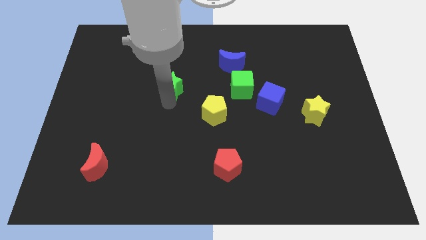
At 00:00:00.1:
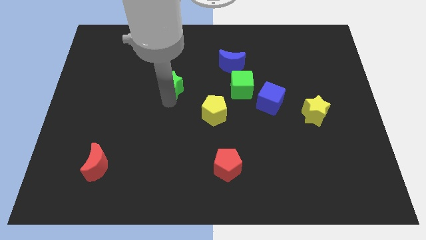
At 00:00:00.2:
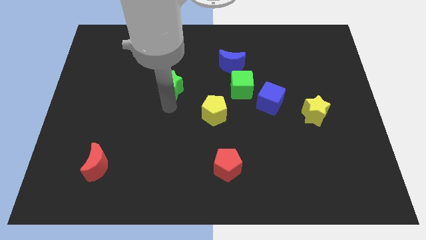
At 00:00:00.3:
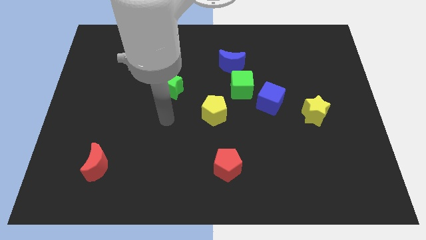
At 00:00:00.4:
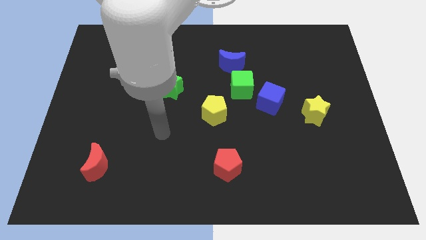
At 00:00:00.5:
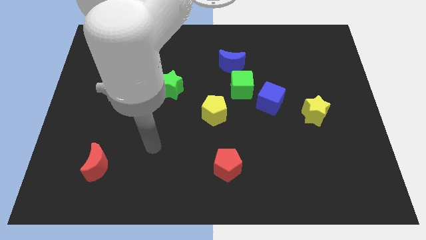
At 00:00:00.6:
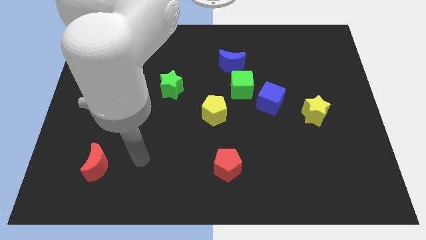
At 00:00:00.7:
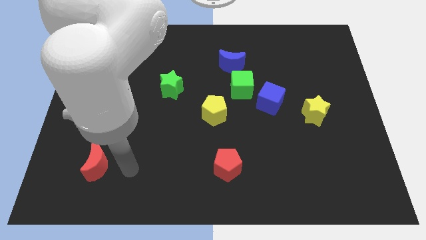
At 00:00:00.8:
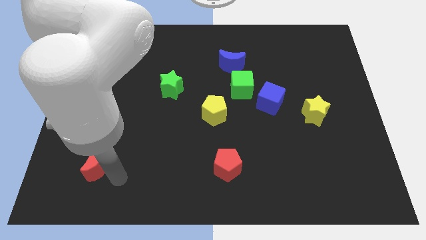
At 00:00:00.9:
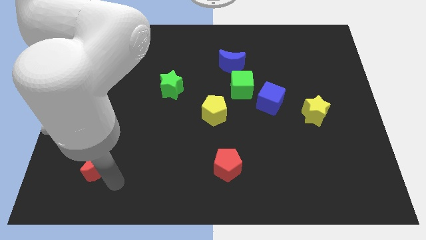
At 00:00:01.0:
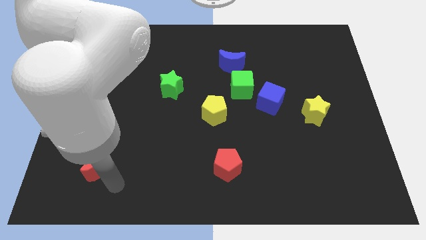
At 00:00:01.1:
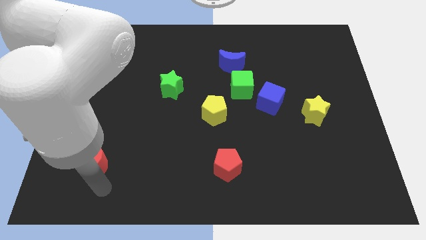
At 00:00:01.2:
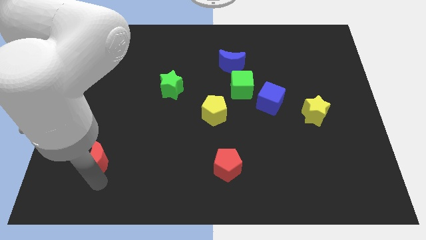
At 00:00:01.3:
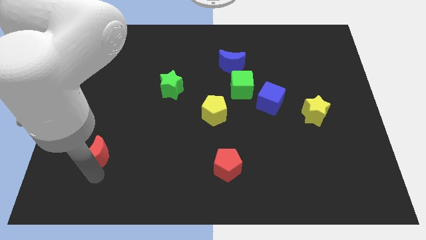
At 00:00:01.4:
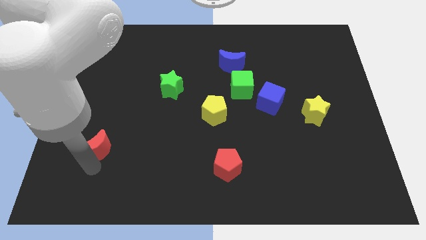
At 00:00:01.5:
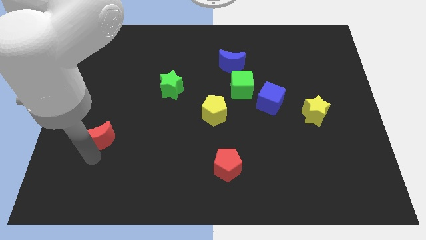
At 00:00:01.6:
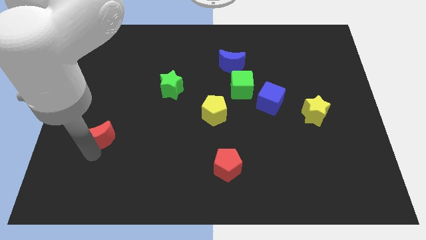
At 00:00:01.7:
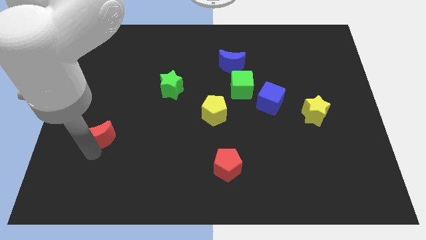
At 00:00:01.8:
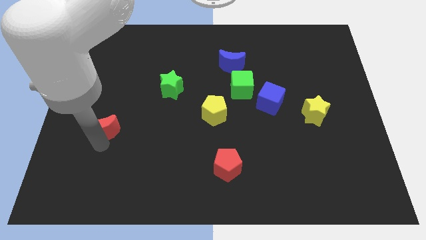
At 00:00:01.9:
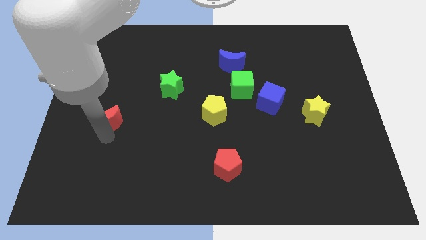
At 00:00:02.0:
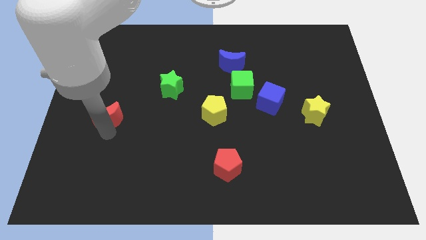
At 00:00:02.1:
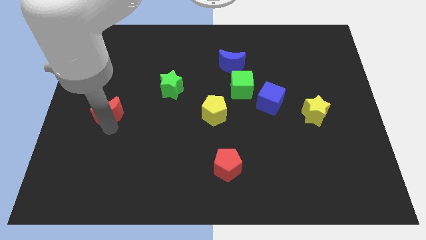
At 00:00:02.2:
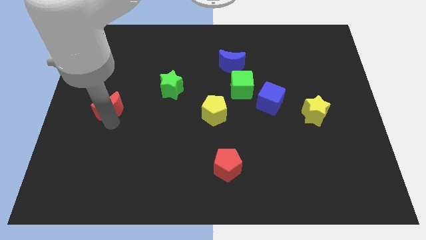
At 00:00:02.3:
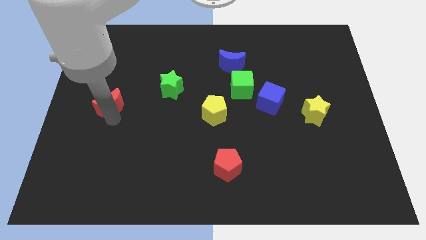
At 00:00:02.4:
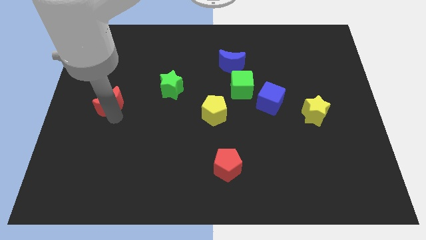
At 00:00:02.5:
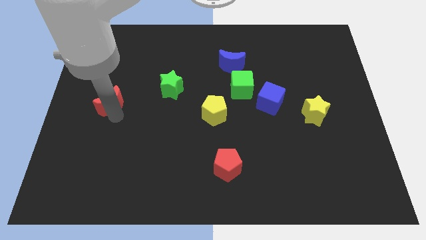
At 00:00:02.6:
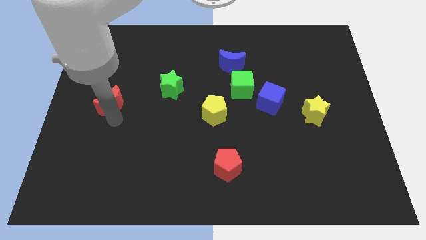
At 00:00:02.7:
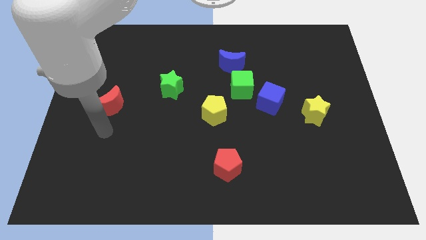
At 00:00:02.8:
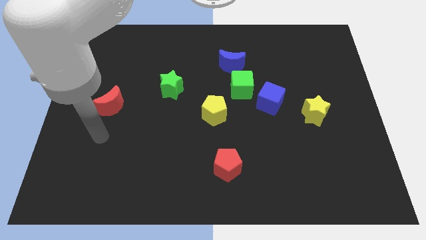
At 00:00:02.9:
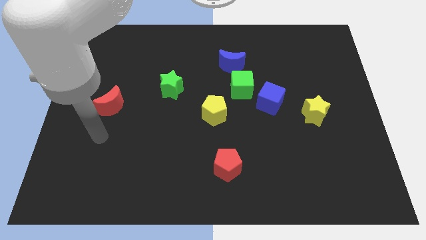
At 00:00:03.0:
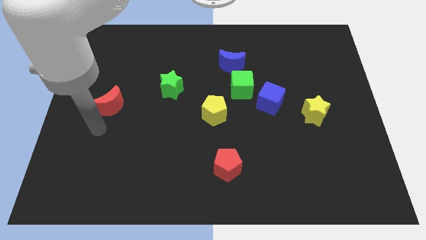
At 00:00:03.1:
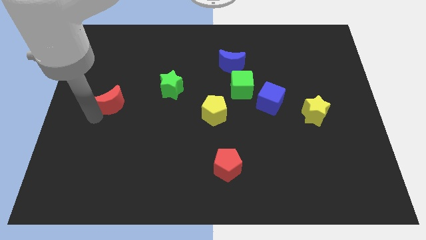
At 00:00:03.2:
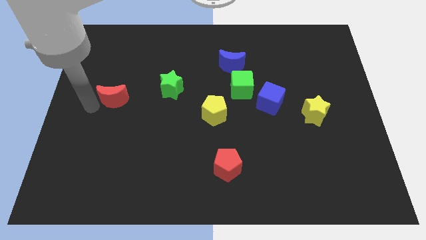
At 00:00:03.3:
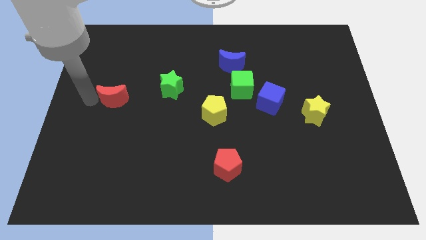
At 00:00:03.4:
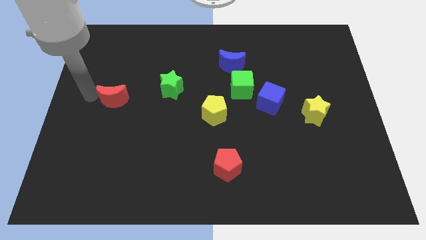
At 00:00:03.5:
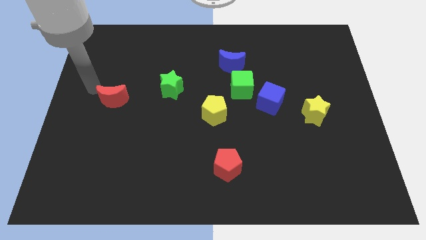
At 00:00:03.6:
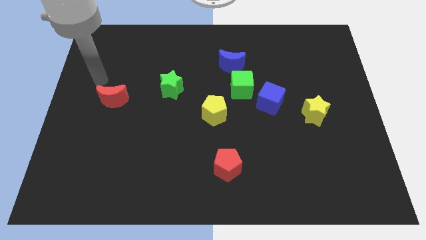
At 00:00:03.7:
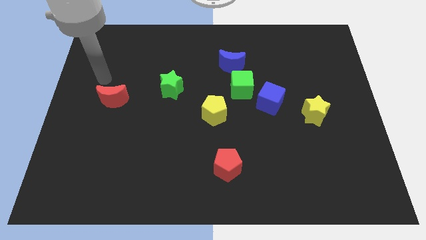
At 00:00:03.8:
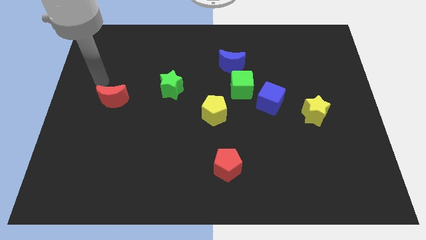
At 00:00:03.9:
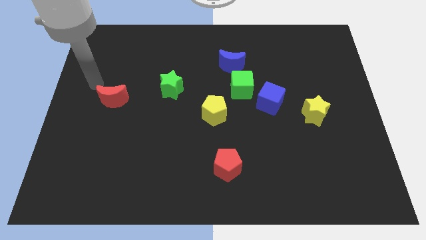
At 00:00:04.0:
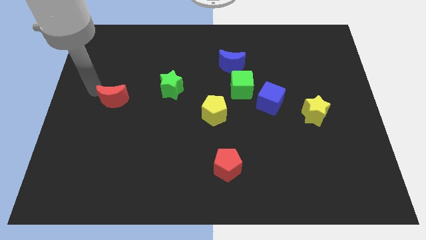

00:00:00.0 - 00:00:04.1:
push the red moon left to the green star

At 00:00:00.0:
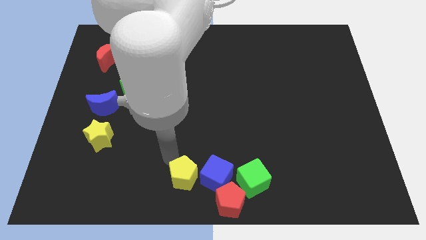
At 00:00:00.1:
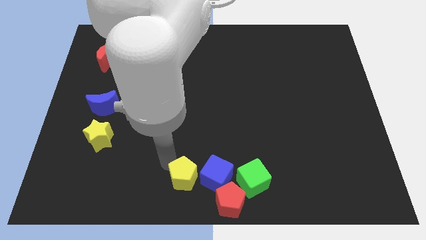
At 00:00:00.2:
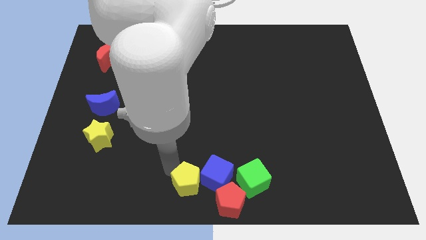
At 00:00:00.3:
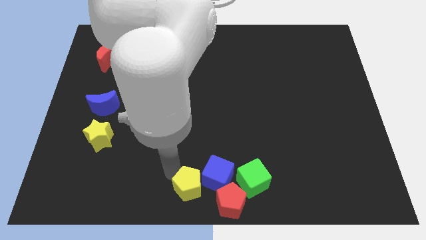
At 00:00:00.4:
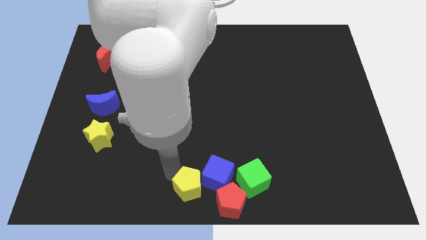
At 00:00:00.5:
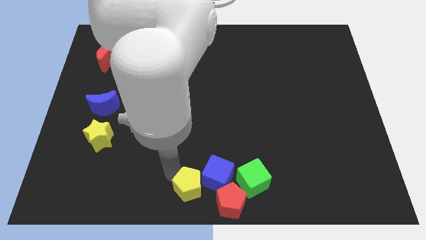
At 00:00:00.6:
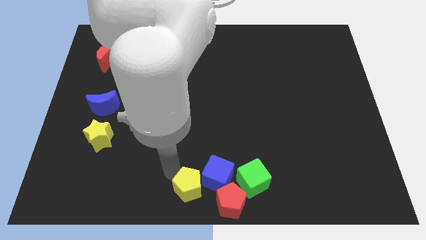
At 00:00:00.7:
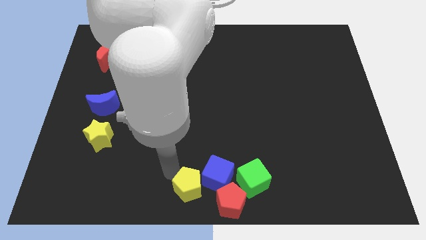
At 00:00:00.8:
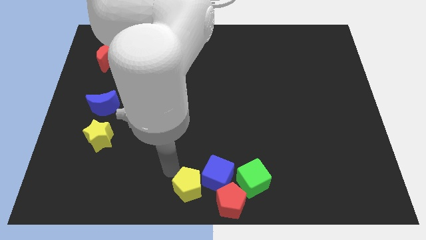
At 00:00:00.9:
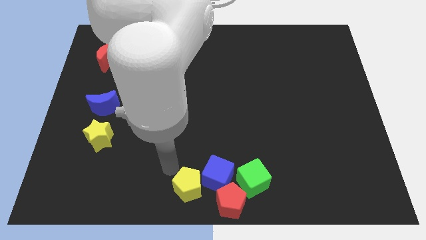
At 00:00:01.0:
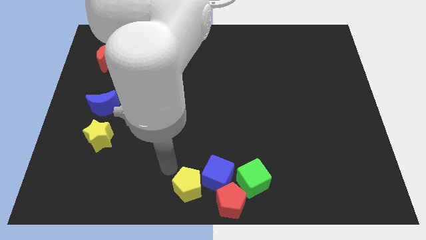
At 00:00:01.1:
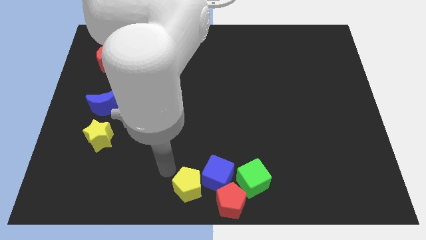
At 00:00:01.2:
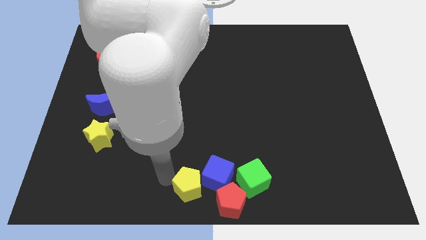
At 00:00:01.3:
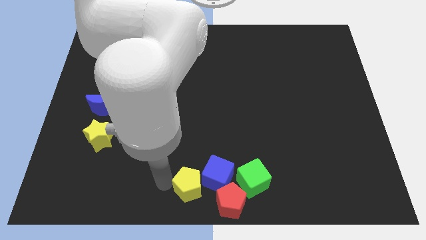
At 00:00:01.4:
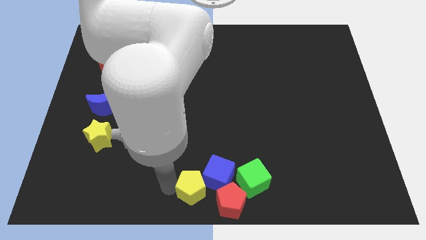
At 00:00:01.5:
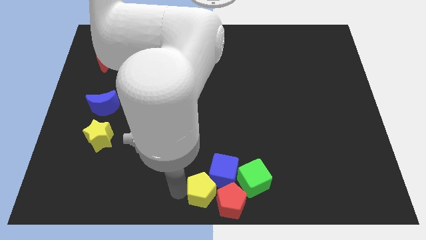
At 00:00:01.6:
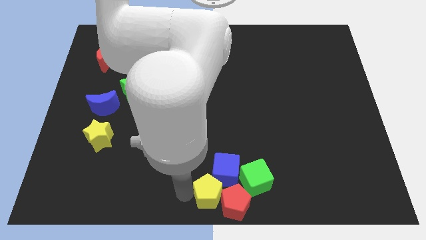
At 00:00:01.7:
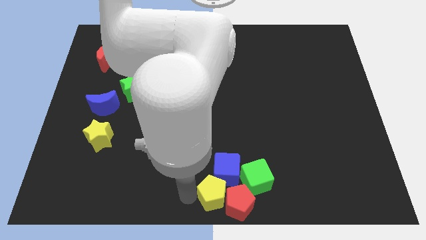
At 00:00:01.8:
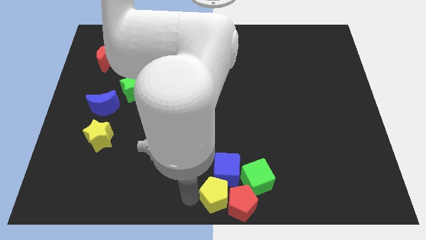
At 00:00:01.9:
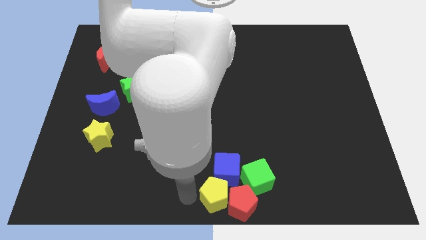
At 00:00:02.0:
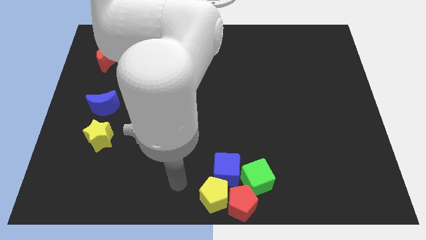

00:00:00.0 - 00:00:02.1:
place the yellow pentagon to left side of red pentagon

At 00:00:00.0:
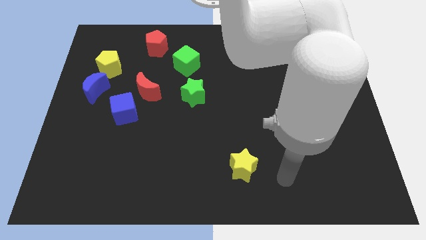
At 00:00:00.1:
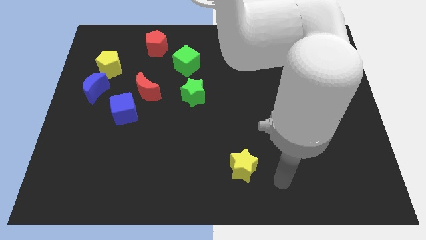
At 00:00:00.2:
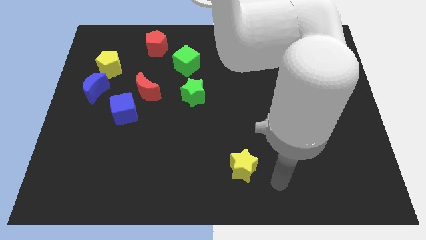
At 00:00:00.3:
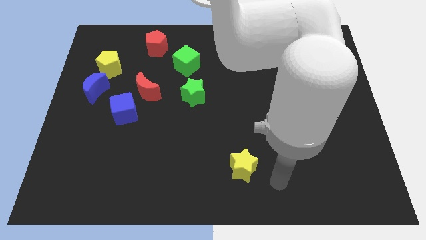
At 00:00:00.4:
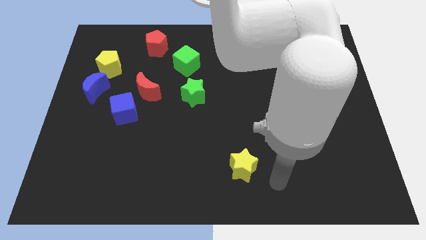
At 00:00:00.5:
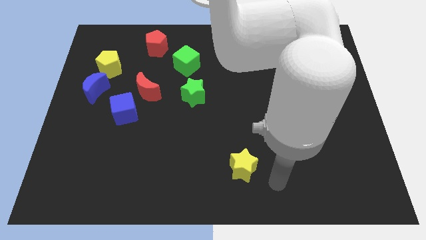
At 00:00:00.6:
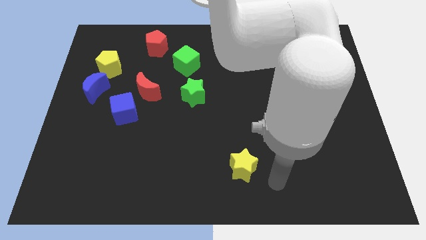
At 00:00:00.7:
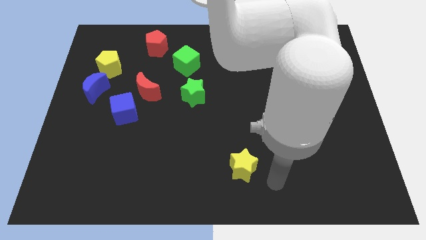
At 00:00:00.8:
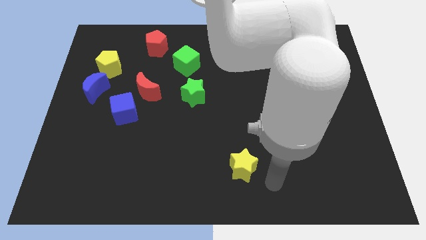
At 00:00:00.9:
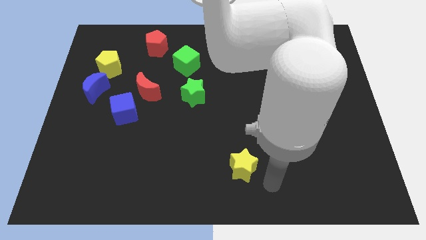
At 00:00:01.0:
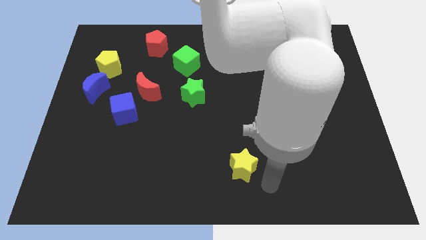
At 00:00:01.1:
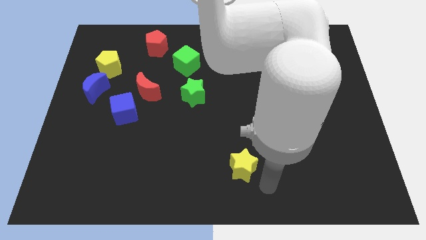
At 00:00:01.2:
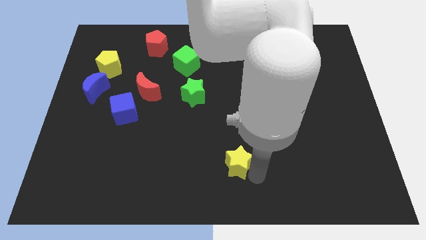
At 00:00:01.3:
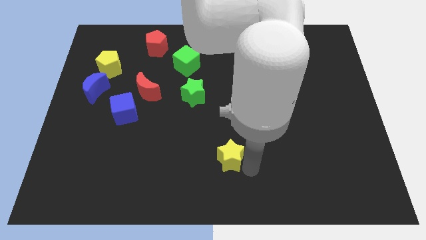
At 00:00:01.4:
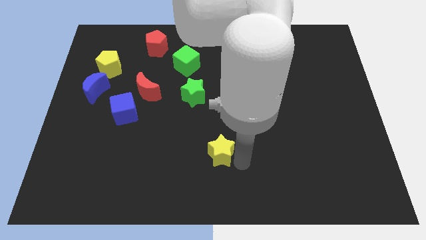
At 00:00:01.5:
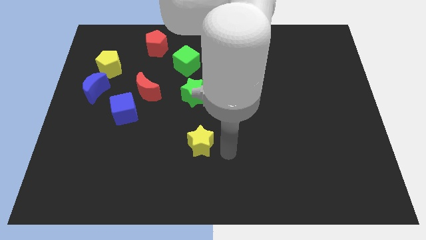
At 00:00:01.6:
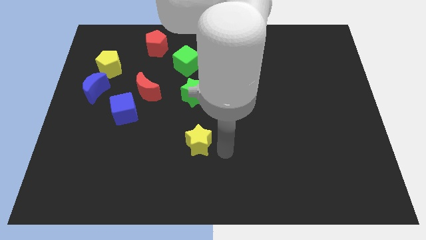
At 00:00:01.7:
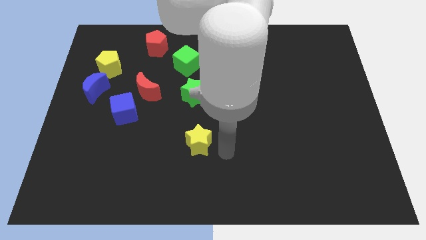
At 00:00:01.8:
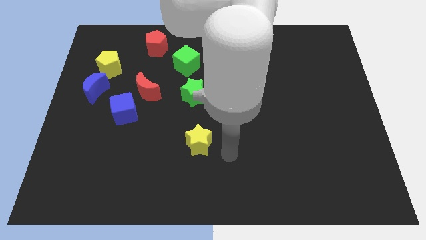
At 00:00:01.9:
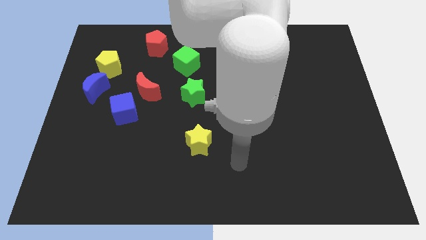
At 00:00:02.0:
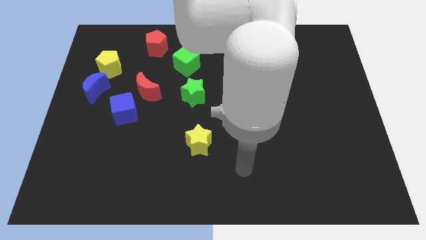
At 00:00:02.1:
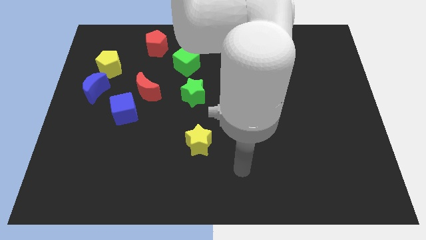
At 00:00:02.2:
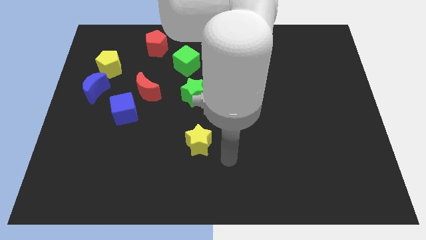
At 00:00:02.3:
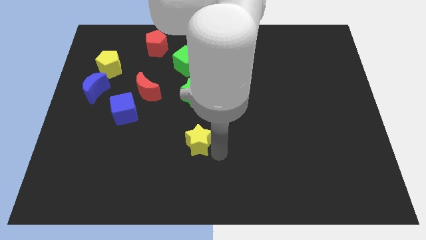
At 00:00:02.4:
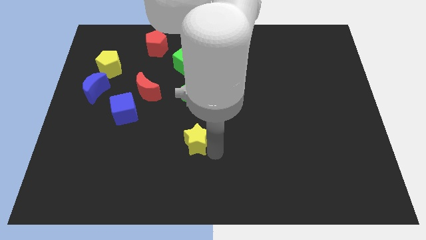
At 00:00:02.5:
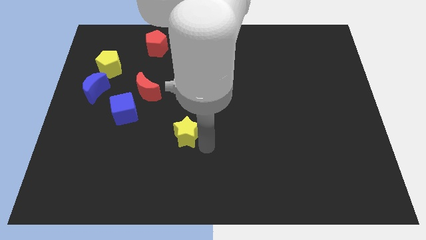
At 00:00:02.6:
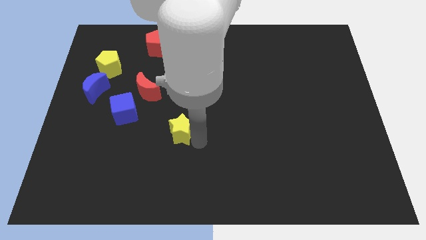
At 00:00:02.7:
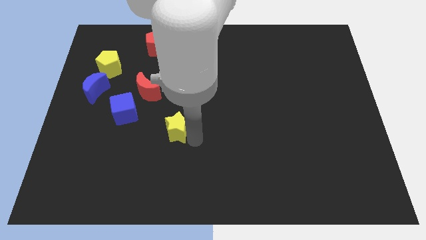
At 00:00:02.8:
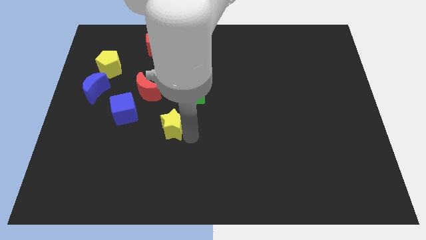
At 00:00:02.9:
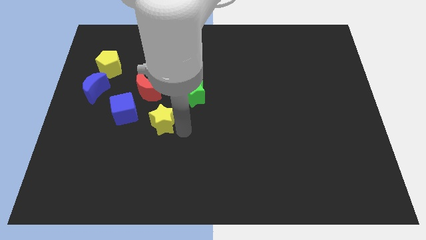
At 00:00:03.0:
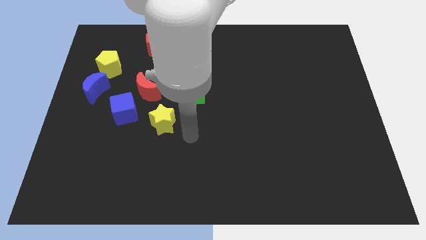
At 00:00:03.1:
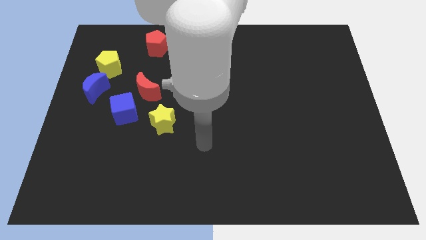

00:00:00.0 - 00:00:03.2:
place the yellow star diagonal below the red moon
